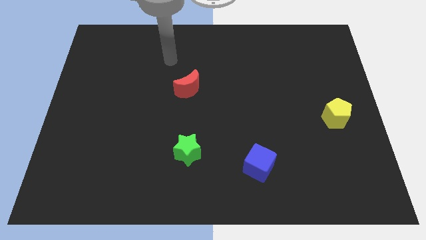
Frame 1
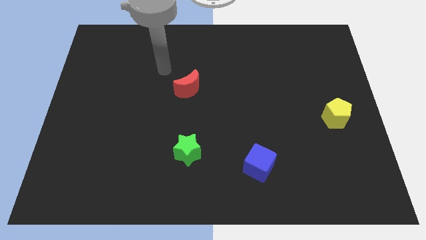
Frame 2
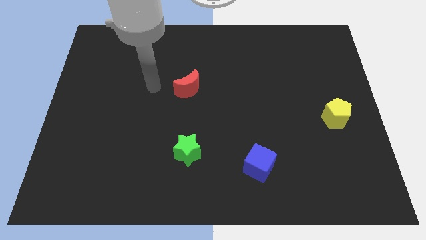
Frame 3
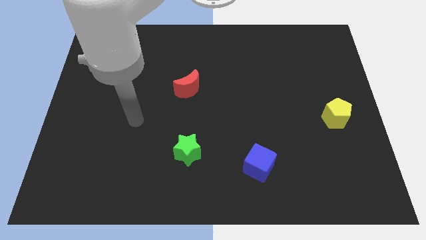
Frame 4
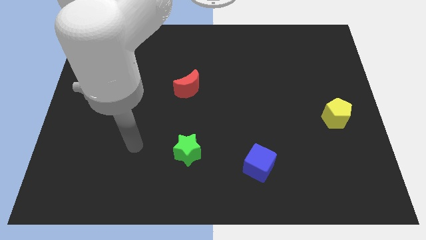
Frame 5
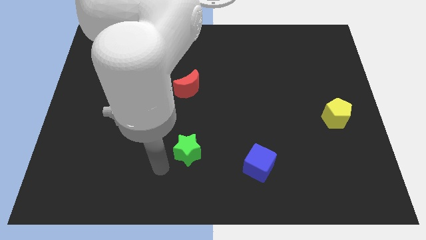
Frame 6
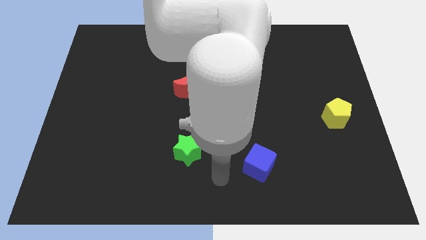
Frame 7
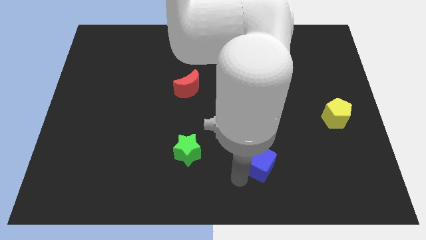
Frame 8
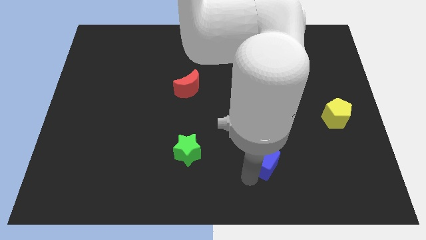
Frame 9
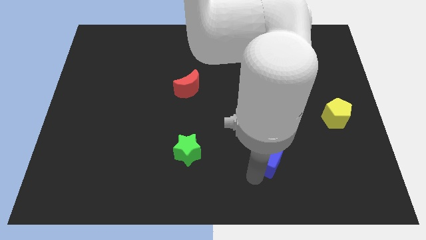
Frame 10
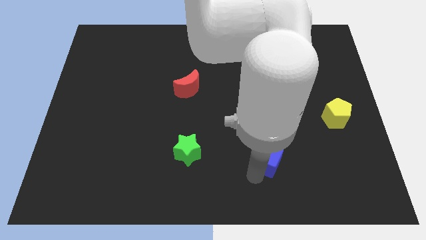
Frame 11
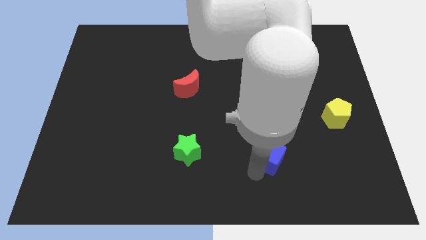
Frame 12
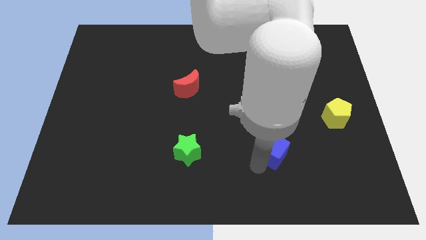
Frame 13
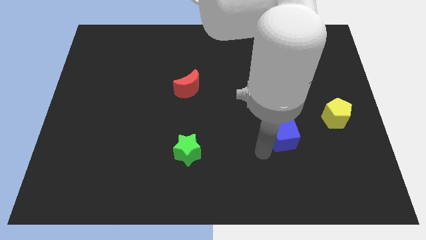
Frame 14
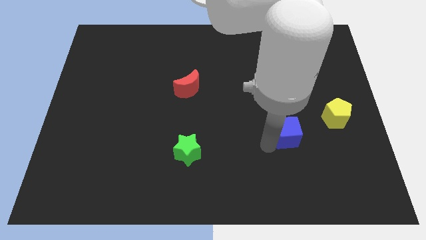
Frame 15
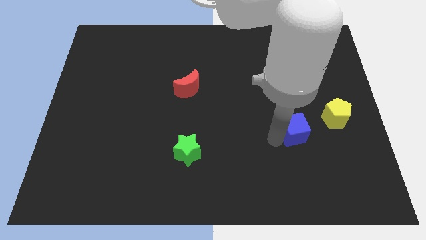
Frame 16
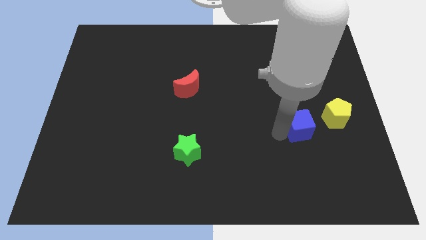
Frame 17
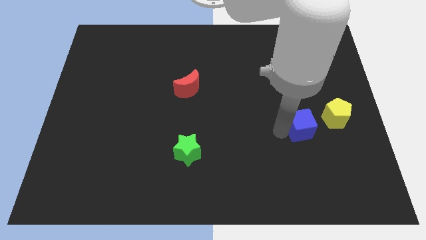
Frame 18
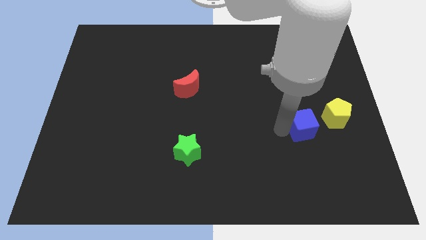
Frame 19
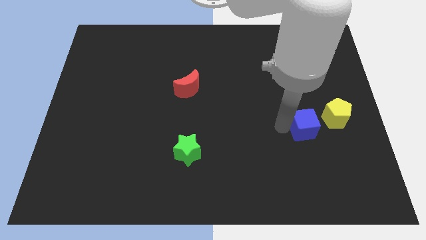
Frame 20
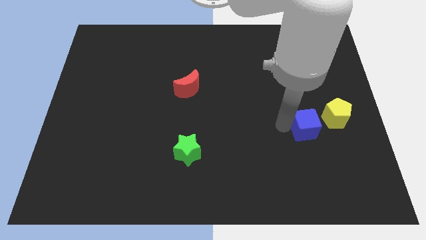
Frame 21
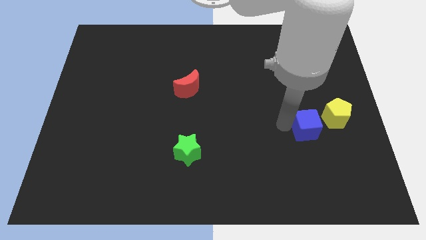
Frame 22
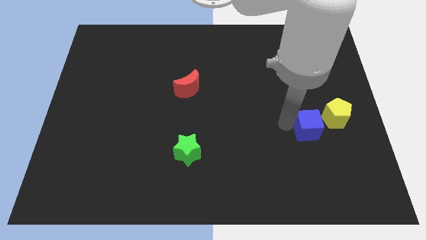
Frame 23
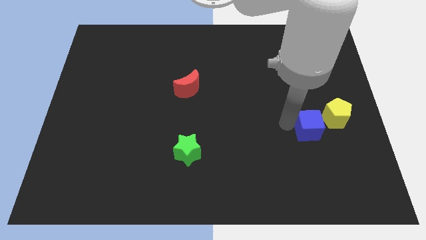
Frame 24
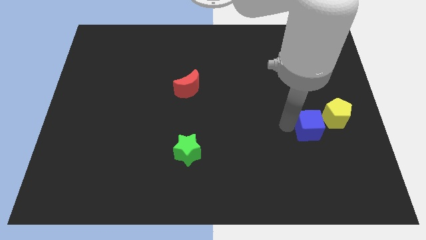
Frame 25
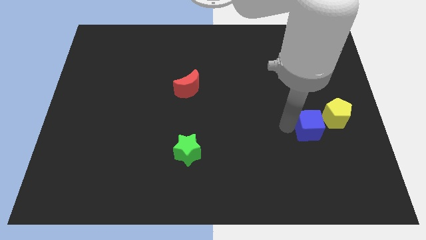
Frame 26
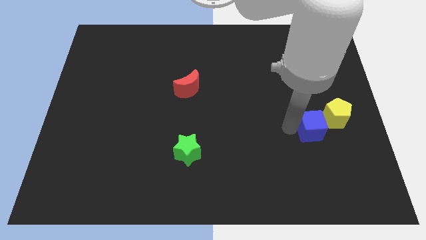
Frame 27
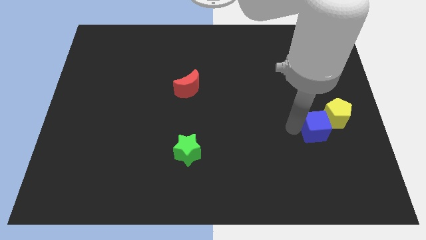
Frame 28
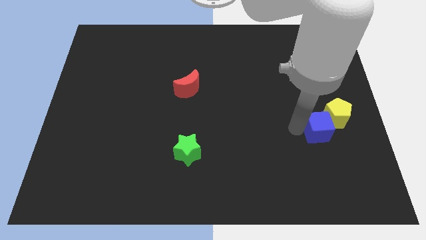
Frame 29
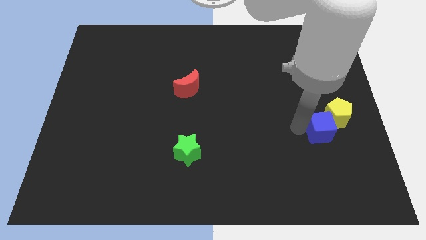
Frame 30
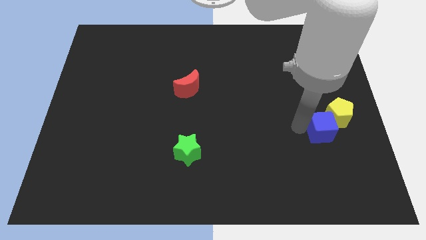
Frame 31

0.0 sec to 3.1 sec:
move the blue block close to the yellow block

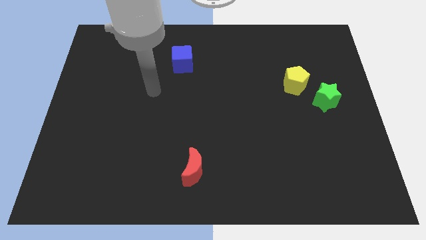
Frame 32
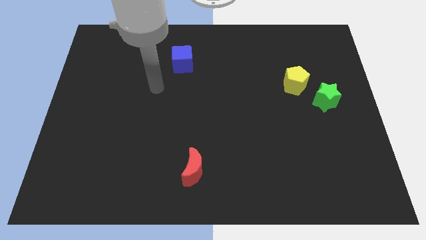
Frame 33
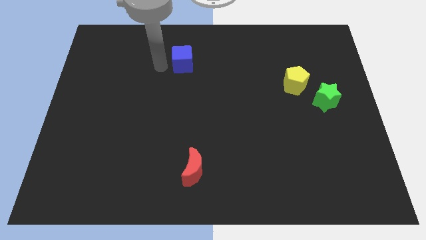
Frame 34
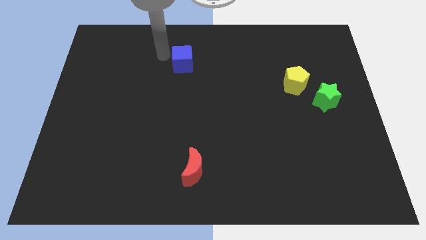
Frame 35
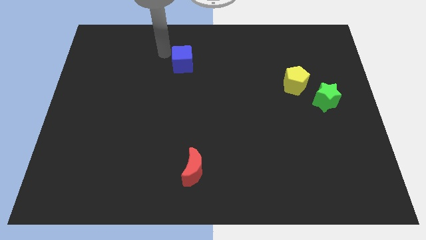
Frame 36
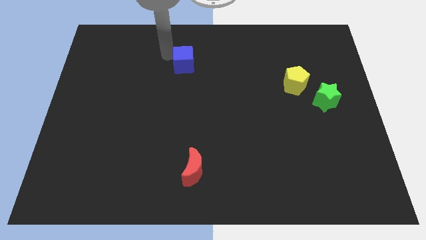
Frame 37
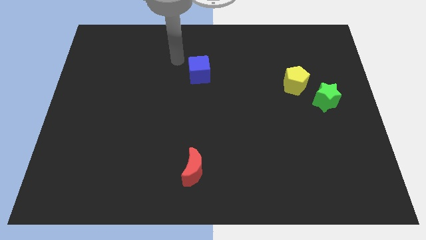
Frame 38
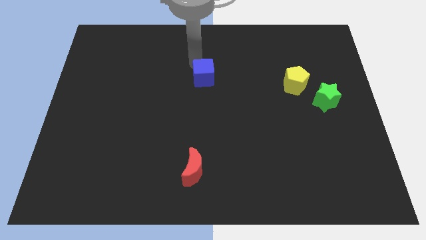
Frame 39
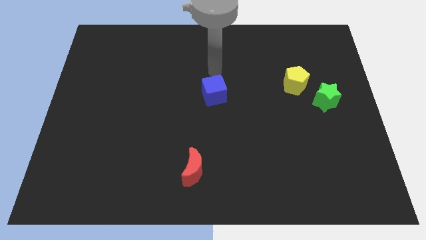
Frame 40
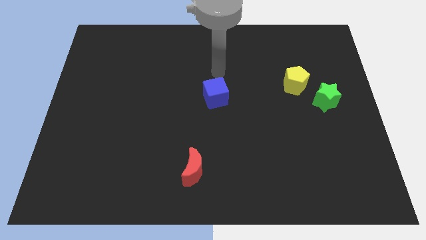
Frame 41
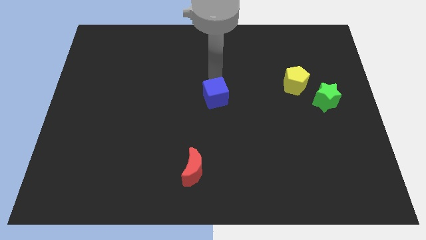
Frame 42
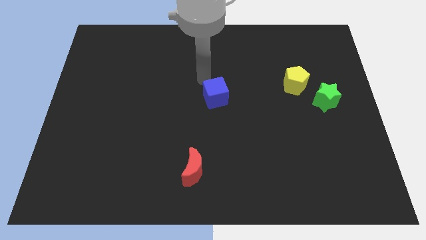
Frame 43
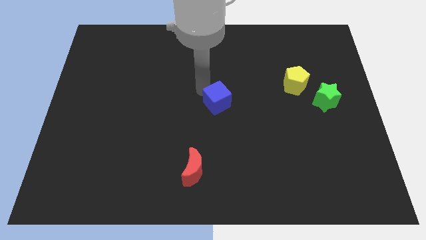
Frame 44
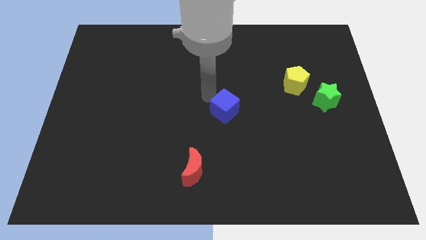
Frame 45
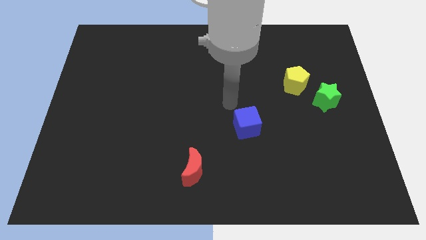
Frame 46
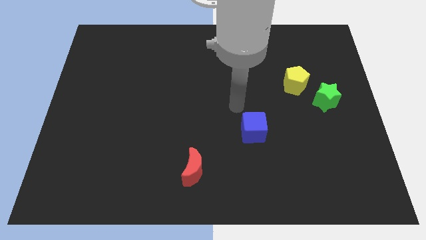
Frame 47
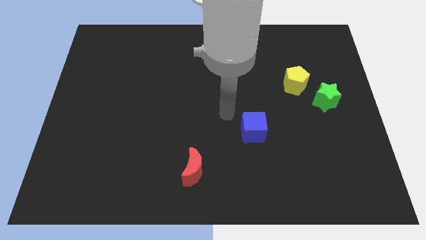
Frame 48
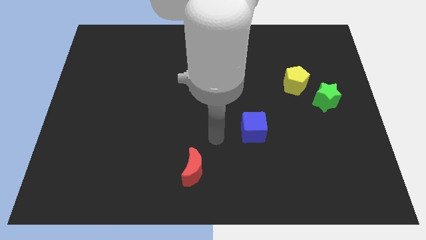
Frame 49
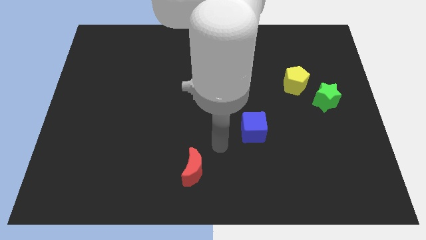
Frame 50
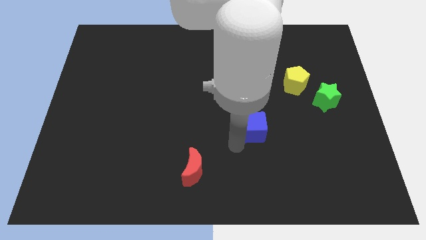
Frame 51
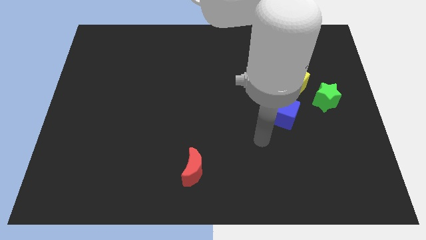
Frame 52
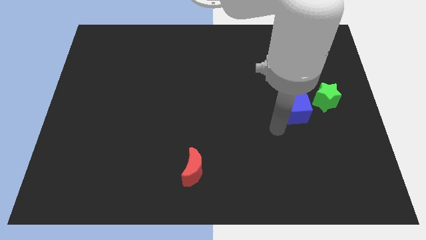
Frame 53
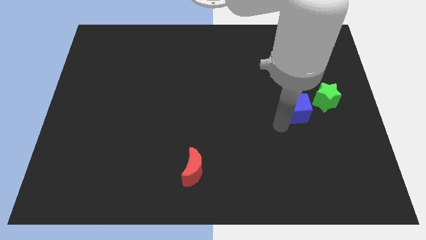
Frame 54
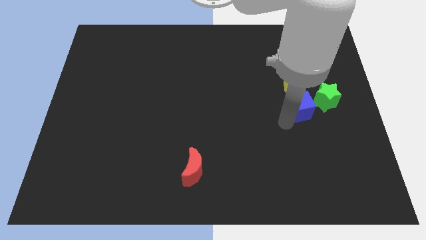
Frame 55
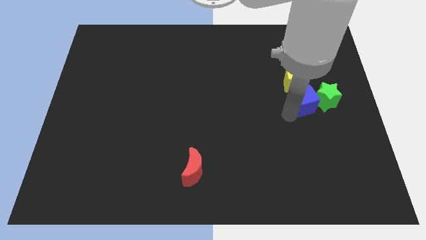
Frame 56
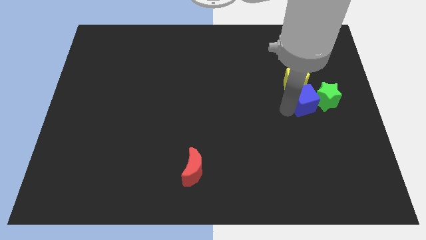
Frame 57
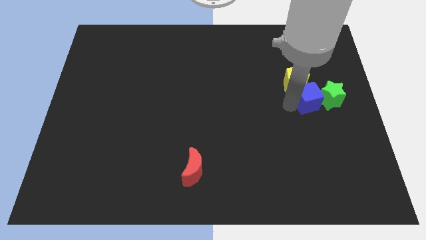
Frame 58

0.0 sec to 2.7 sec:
push the blue block towards the green block

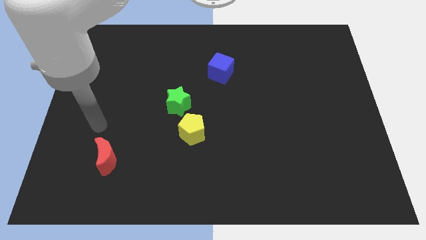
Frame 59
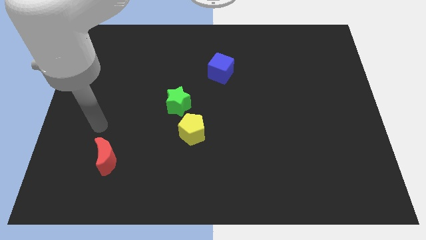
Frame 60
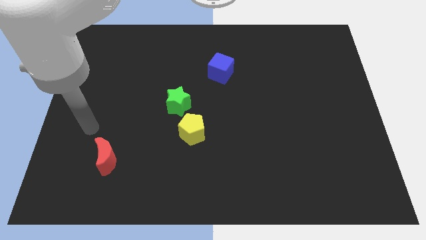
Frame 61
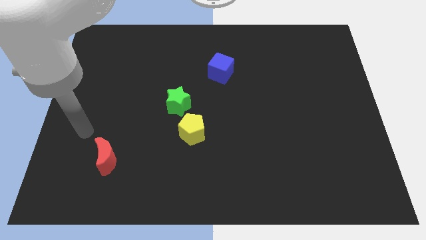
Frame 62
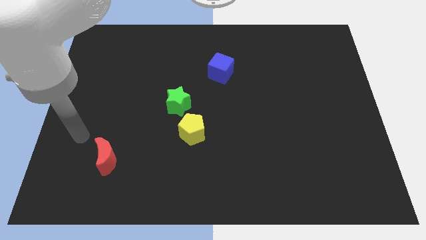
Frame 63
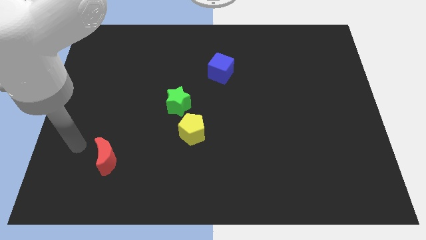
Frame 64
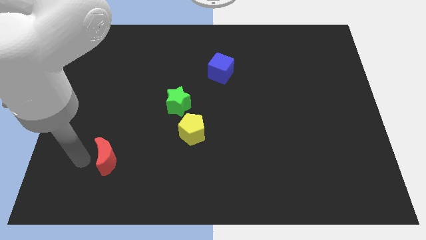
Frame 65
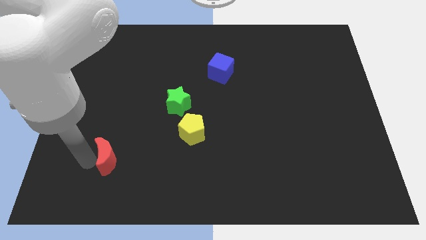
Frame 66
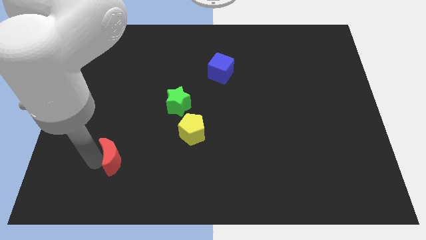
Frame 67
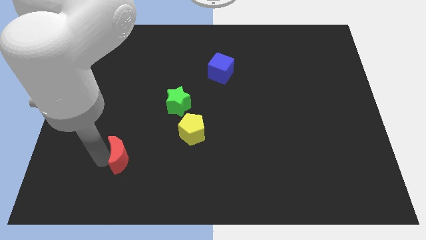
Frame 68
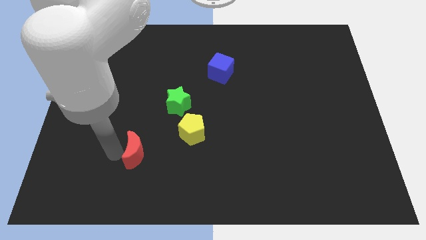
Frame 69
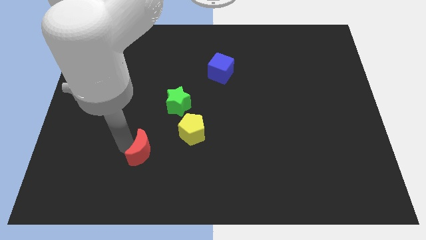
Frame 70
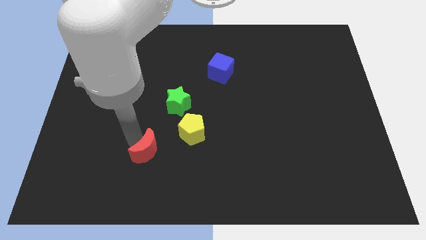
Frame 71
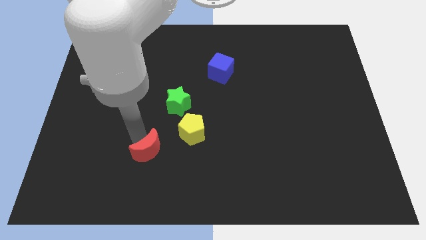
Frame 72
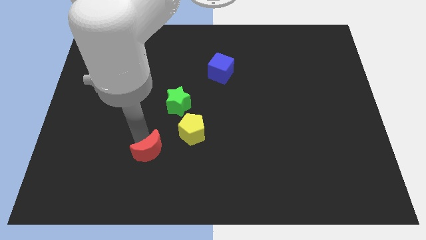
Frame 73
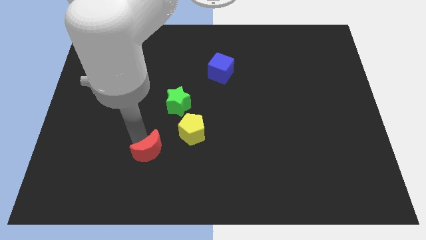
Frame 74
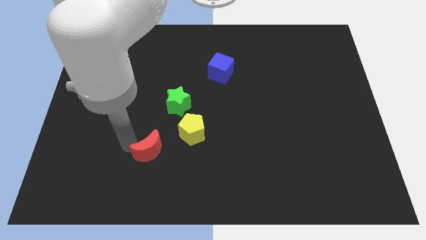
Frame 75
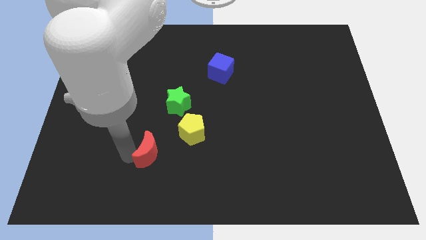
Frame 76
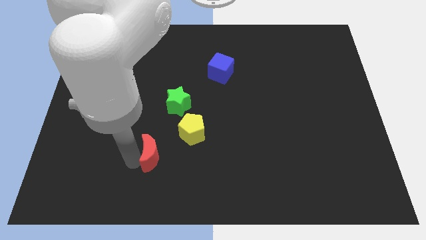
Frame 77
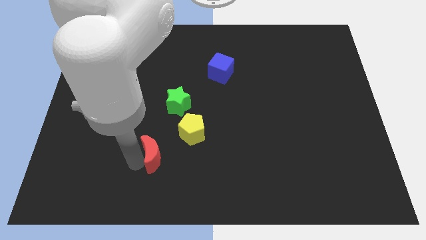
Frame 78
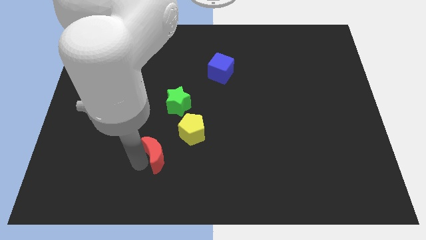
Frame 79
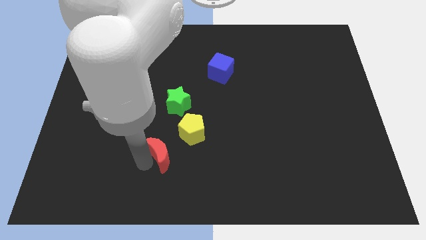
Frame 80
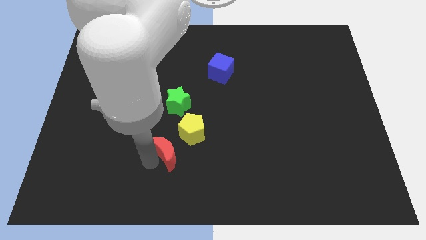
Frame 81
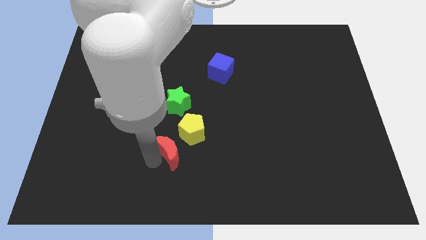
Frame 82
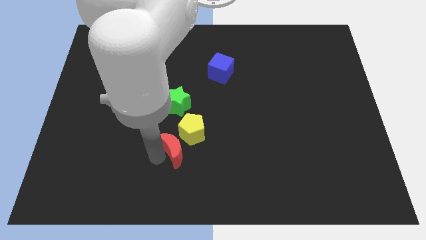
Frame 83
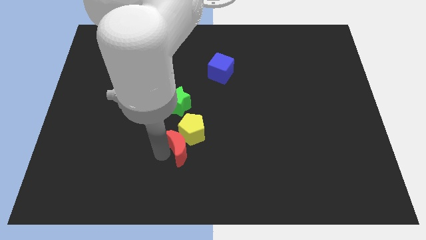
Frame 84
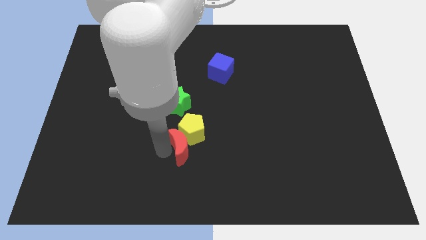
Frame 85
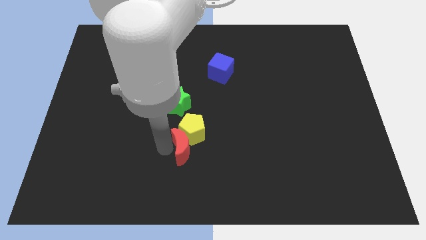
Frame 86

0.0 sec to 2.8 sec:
push the moon next to the yellow block
